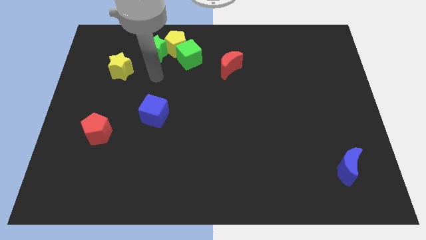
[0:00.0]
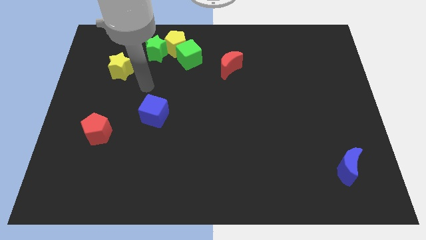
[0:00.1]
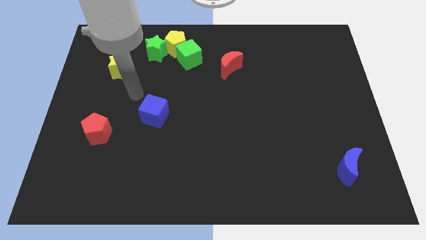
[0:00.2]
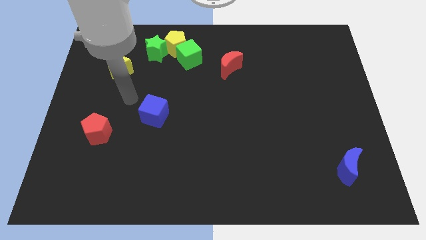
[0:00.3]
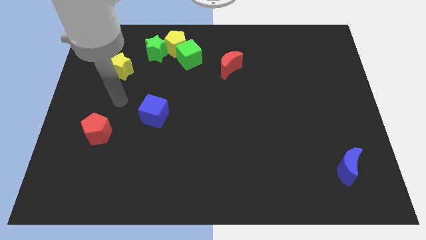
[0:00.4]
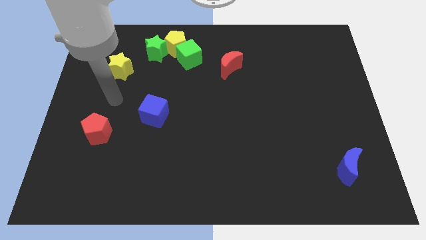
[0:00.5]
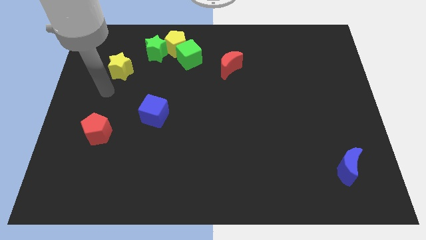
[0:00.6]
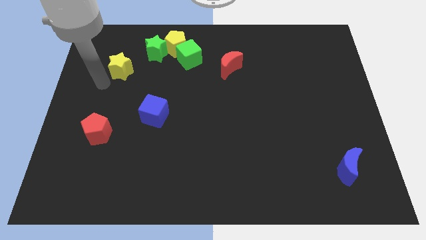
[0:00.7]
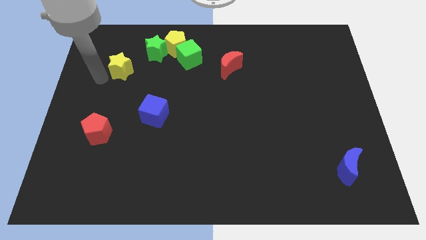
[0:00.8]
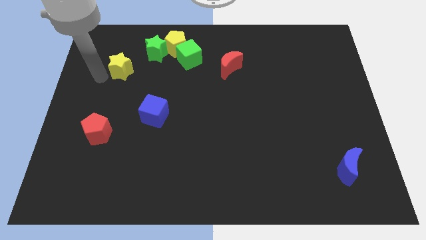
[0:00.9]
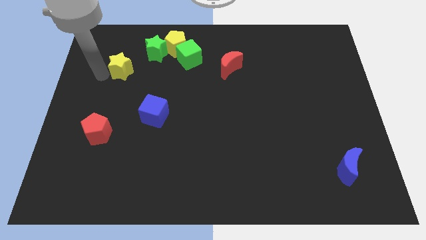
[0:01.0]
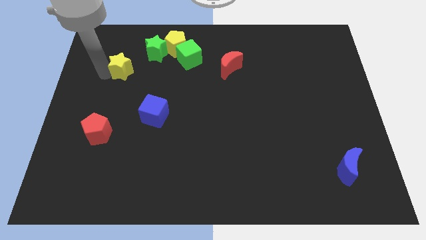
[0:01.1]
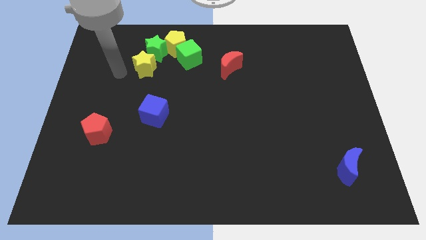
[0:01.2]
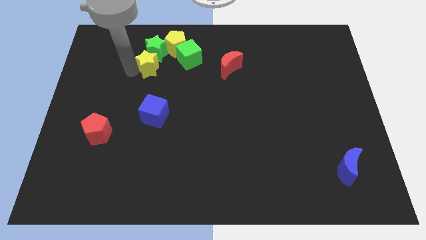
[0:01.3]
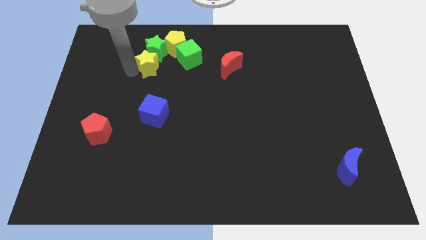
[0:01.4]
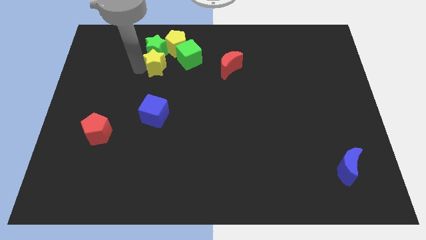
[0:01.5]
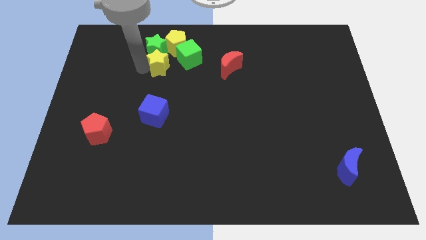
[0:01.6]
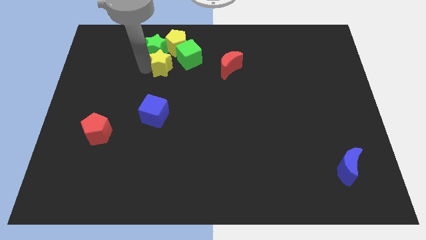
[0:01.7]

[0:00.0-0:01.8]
push the yellow star into green star

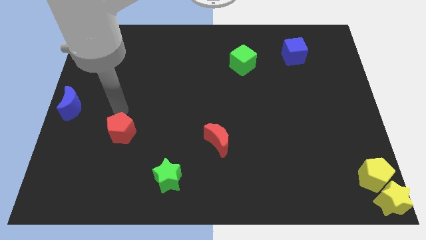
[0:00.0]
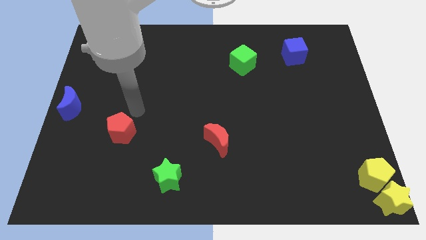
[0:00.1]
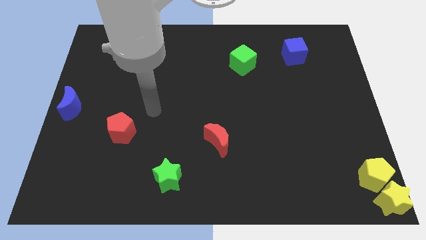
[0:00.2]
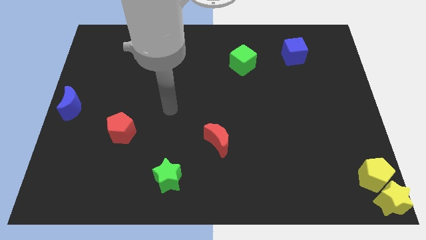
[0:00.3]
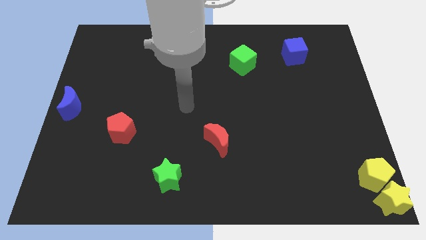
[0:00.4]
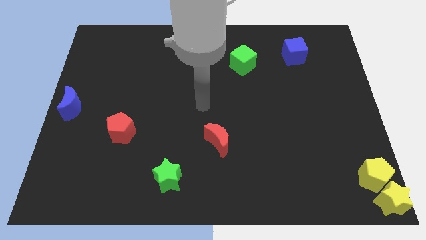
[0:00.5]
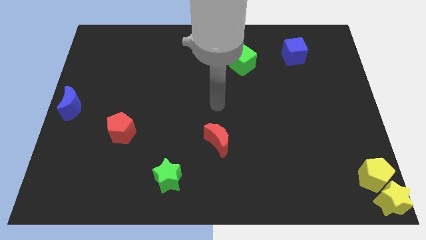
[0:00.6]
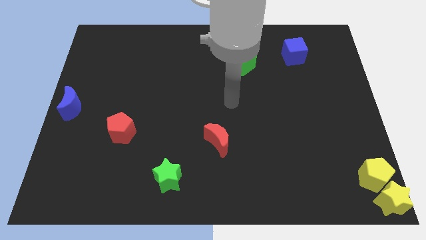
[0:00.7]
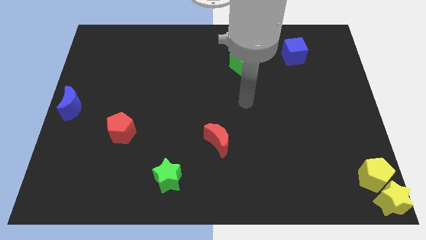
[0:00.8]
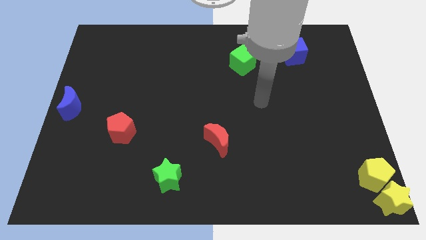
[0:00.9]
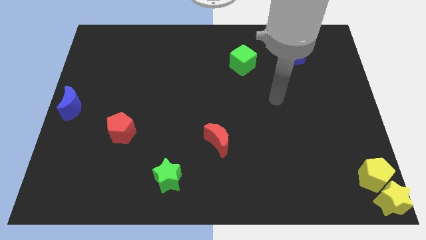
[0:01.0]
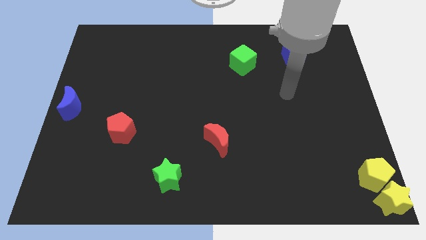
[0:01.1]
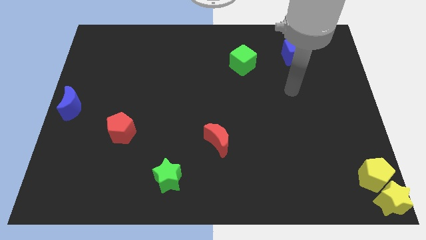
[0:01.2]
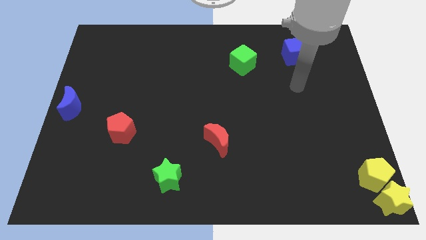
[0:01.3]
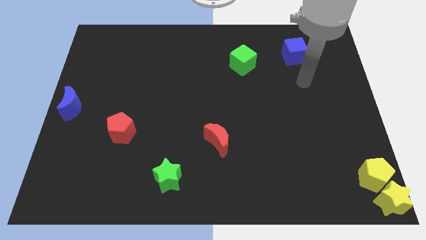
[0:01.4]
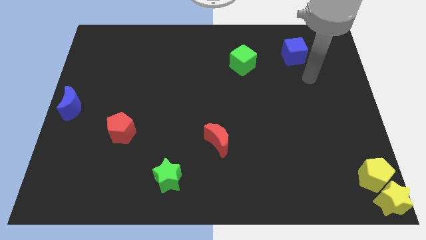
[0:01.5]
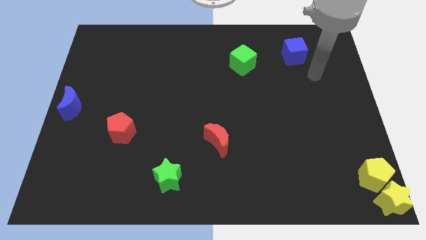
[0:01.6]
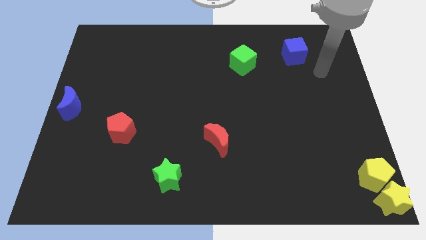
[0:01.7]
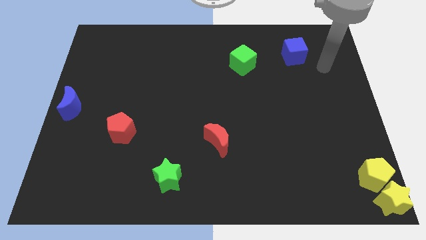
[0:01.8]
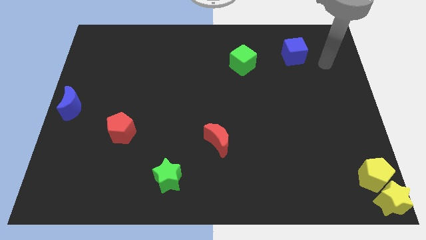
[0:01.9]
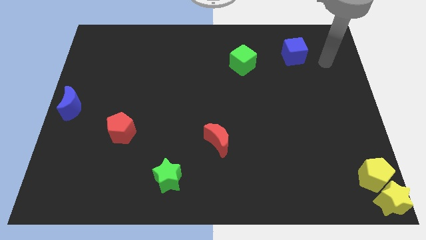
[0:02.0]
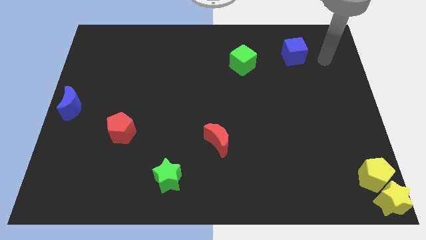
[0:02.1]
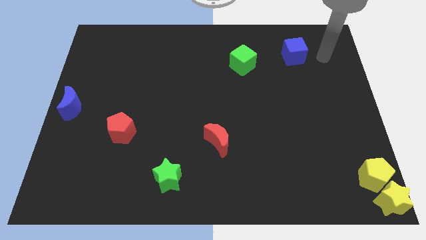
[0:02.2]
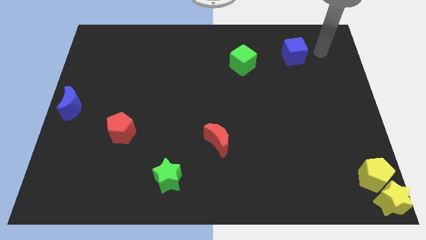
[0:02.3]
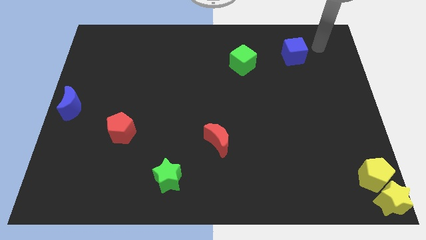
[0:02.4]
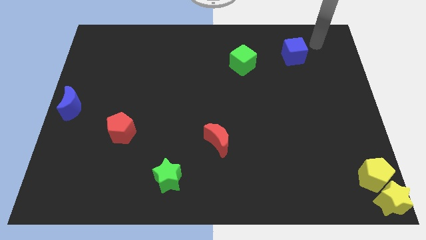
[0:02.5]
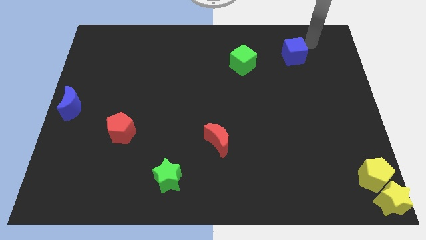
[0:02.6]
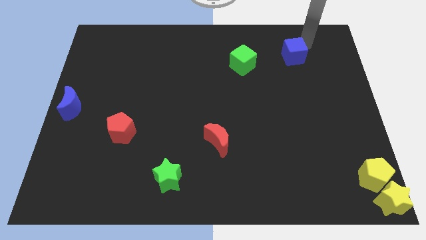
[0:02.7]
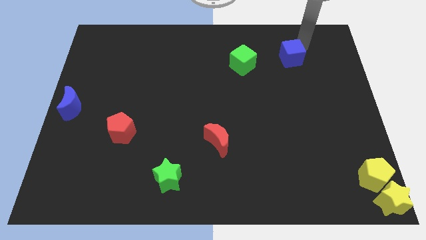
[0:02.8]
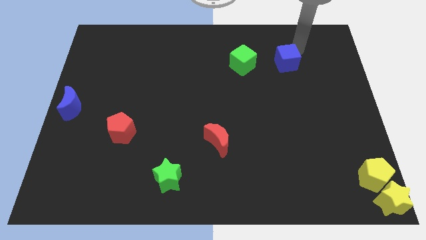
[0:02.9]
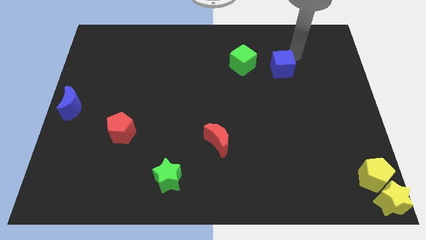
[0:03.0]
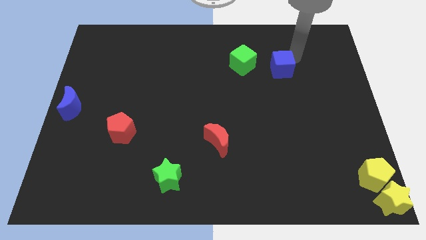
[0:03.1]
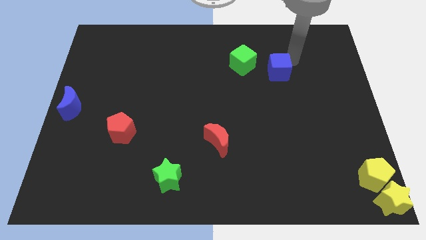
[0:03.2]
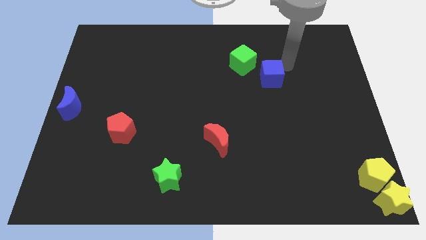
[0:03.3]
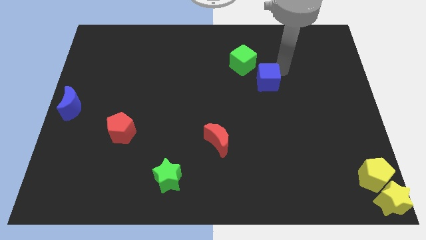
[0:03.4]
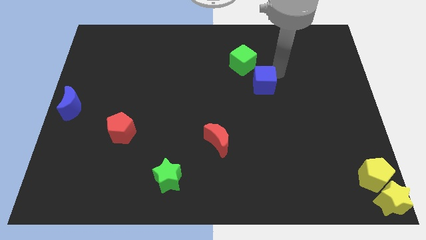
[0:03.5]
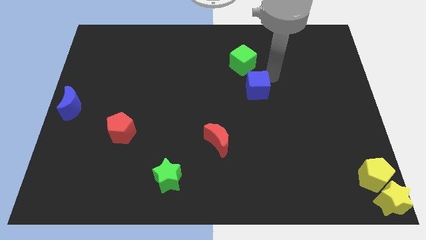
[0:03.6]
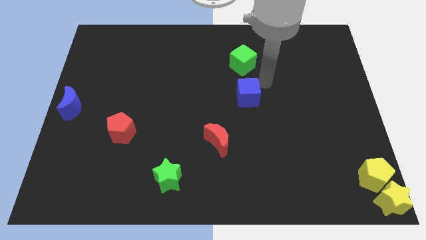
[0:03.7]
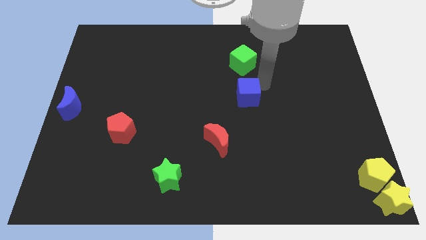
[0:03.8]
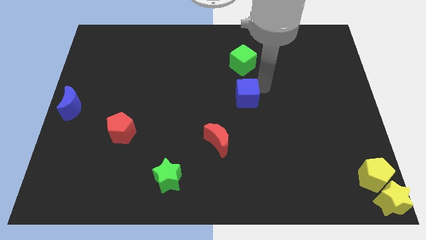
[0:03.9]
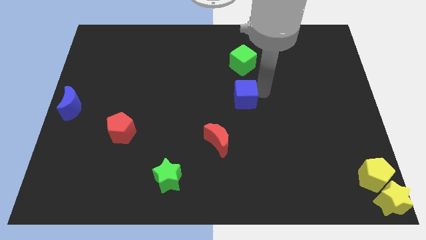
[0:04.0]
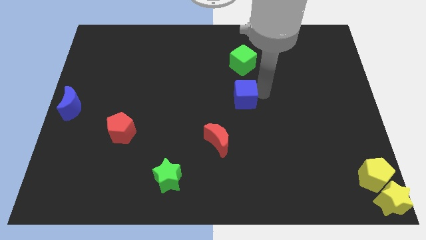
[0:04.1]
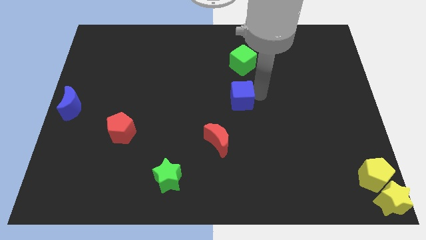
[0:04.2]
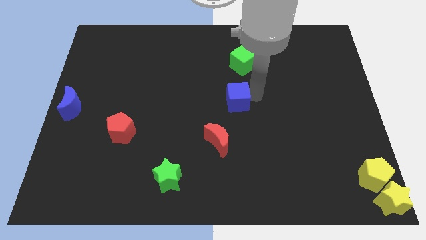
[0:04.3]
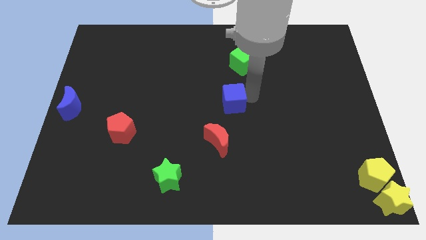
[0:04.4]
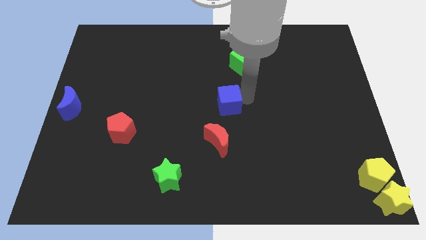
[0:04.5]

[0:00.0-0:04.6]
put the blue cube in between the green cube and red moon

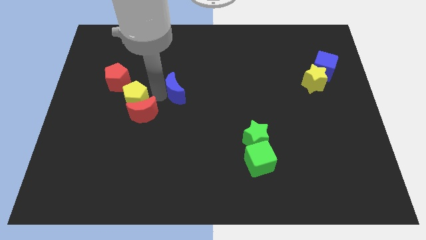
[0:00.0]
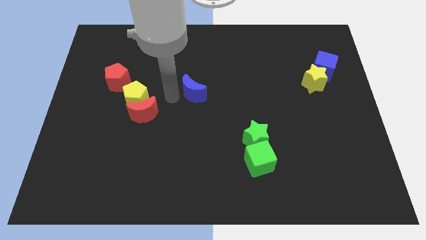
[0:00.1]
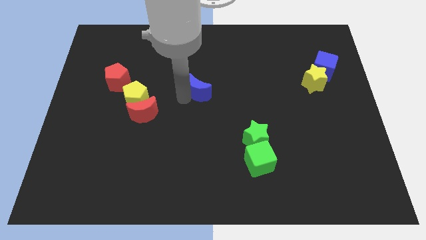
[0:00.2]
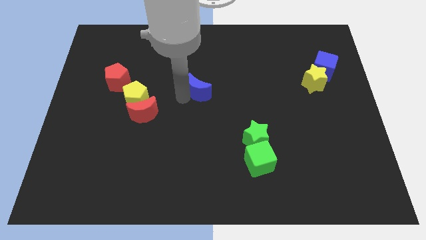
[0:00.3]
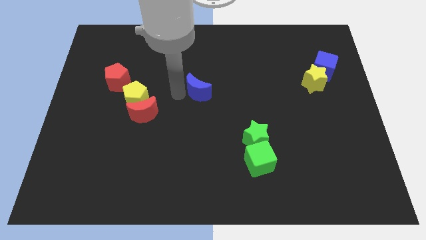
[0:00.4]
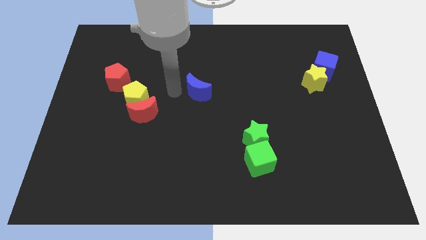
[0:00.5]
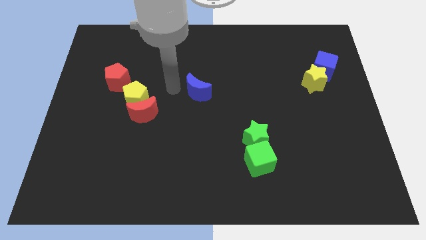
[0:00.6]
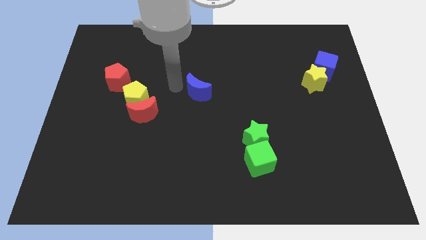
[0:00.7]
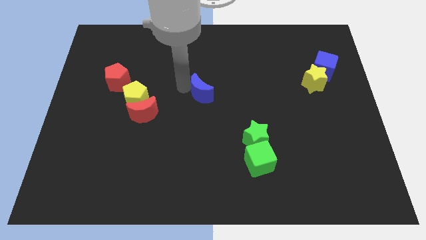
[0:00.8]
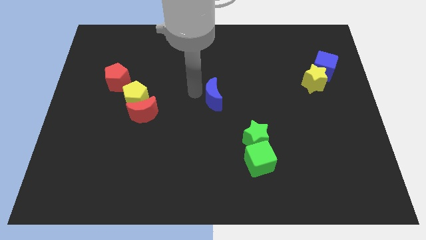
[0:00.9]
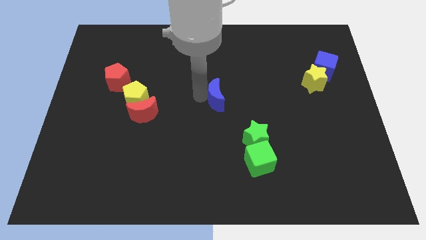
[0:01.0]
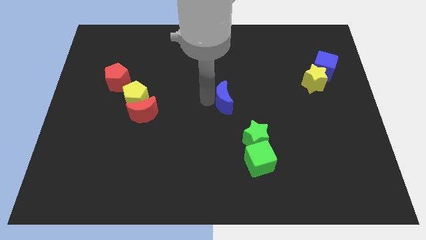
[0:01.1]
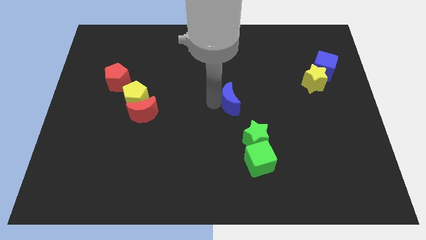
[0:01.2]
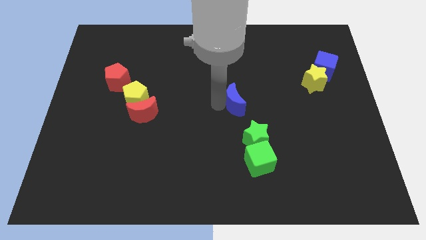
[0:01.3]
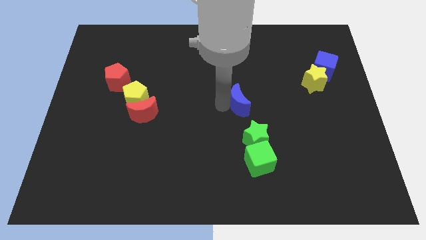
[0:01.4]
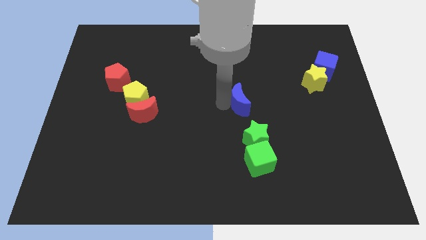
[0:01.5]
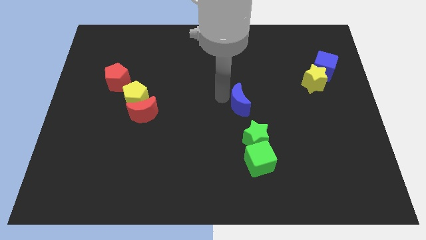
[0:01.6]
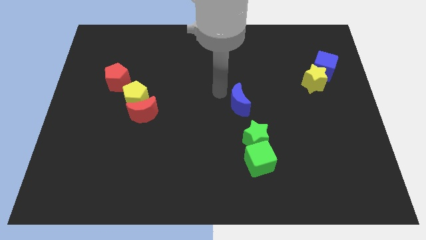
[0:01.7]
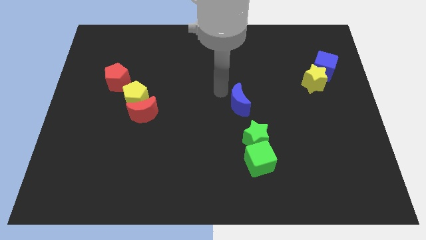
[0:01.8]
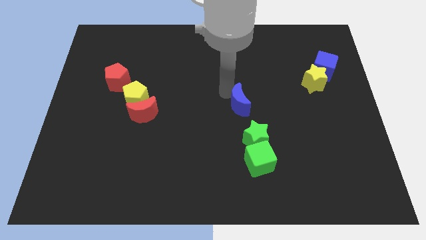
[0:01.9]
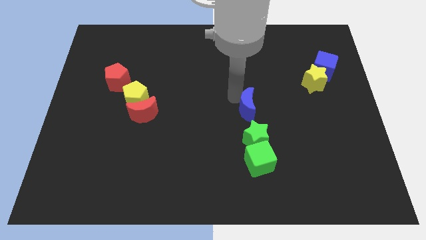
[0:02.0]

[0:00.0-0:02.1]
put the blue moon above the green star

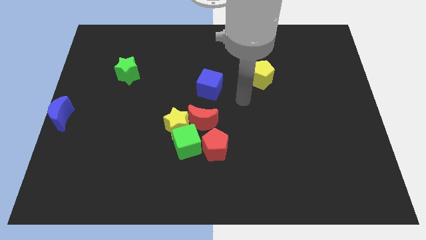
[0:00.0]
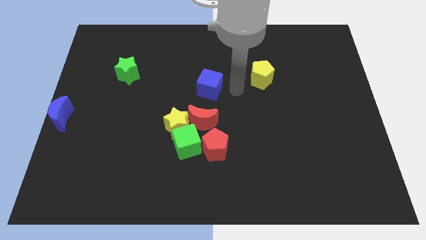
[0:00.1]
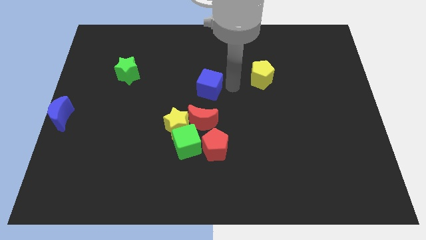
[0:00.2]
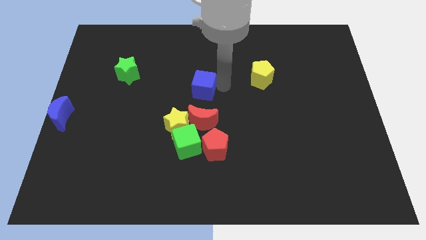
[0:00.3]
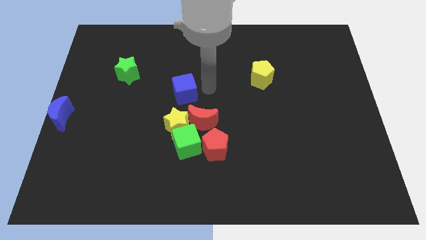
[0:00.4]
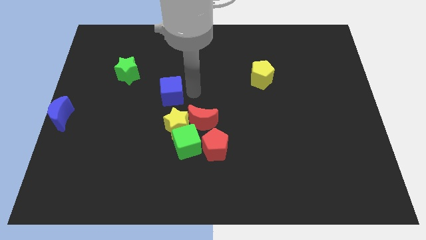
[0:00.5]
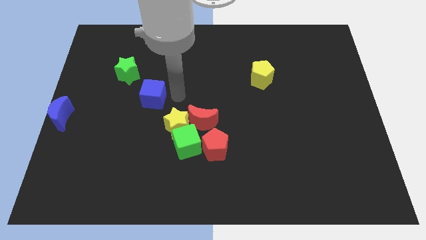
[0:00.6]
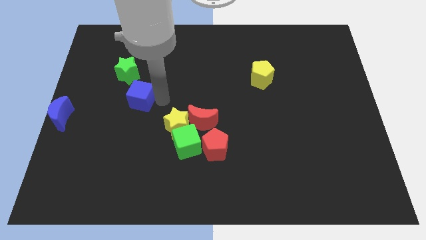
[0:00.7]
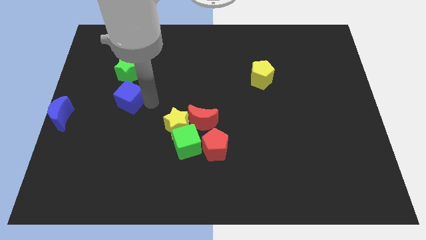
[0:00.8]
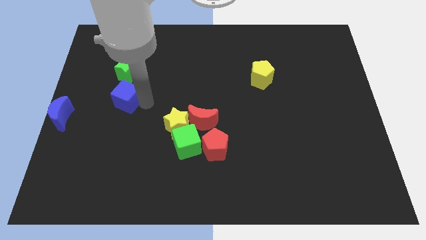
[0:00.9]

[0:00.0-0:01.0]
place the blue cube below the green star
